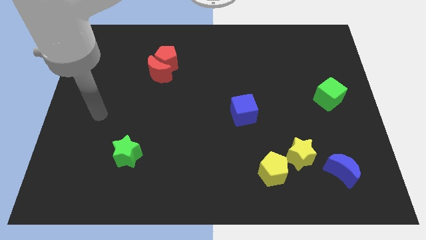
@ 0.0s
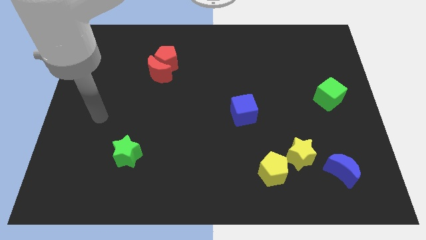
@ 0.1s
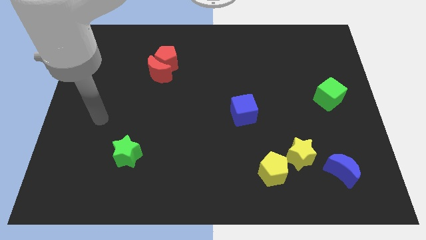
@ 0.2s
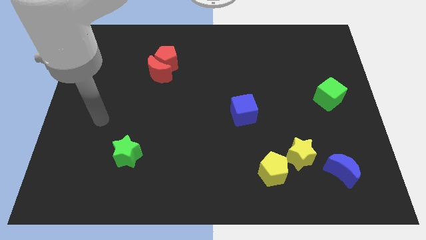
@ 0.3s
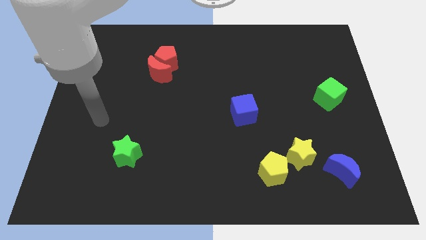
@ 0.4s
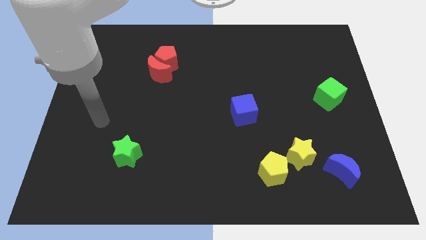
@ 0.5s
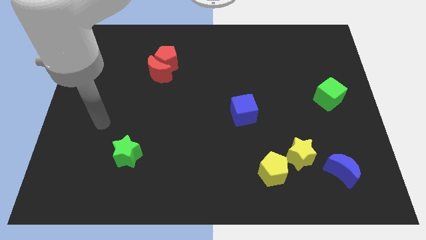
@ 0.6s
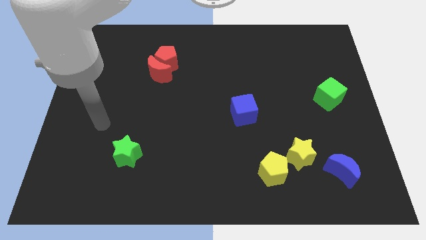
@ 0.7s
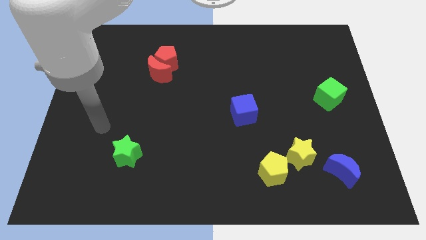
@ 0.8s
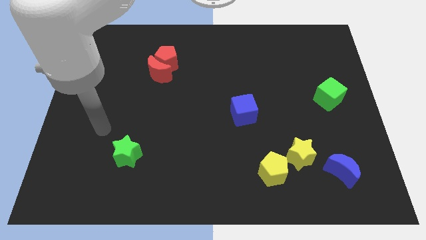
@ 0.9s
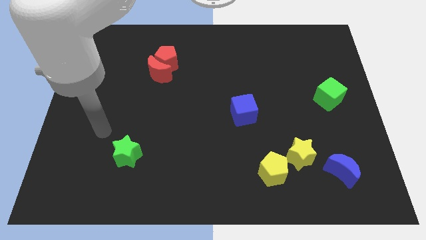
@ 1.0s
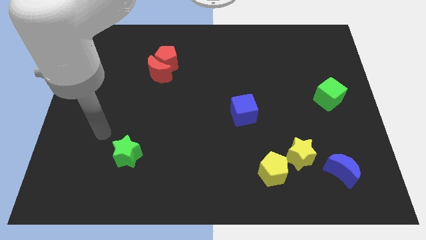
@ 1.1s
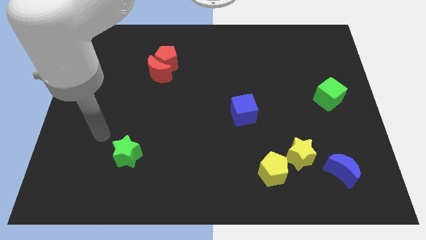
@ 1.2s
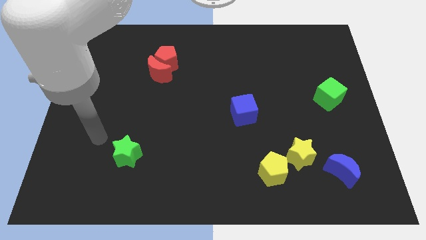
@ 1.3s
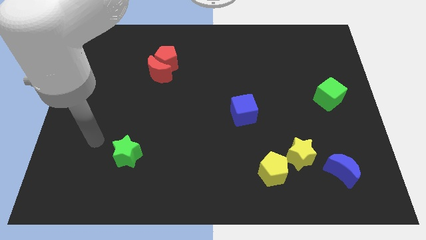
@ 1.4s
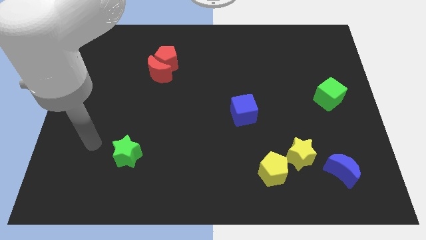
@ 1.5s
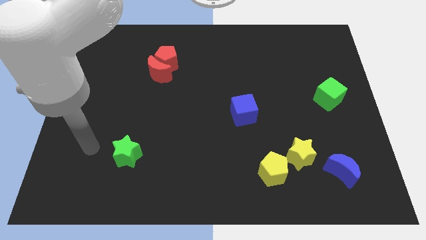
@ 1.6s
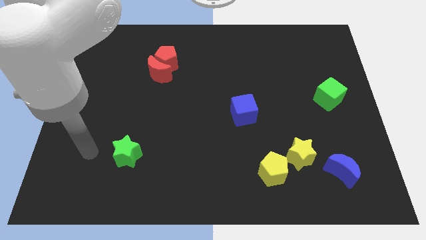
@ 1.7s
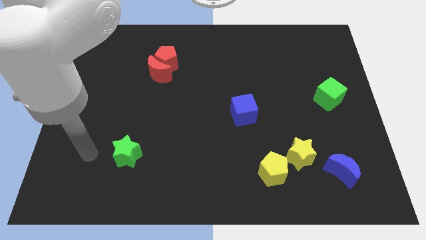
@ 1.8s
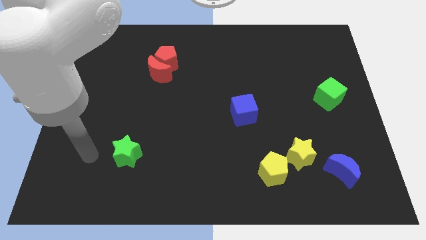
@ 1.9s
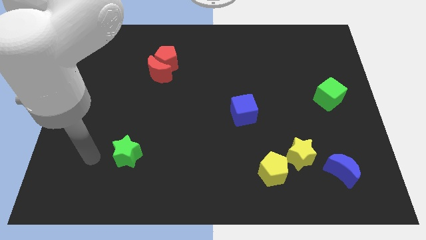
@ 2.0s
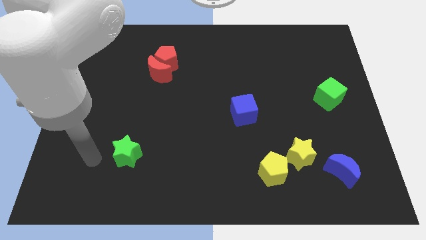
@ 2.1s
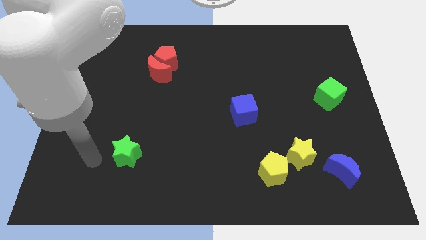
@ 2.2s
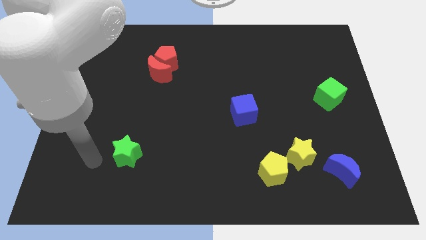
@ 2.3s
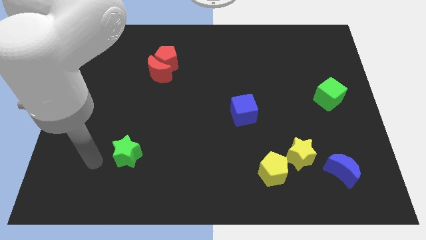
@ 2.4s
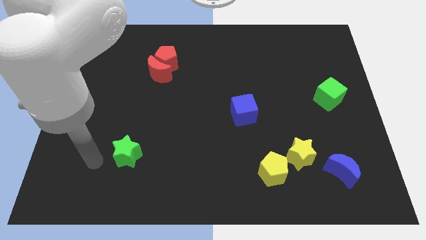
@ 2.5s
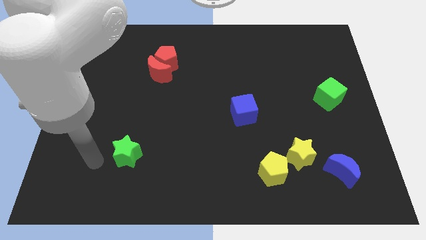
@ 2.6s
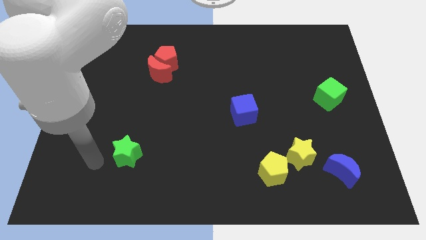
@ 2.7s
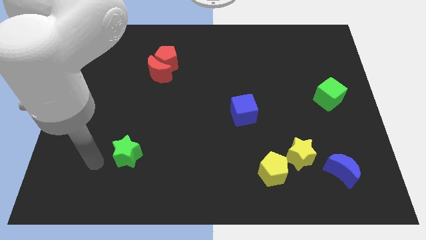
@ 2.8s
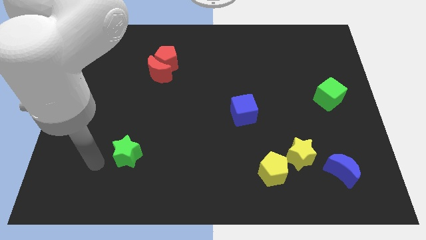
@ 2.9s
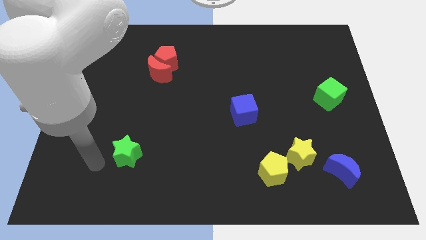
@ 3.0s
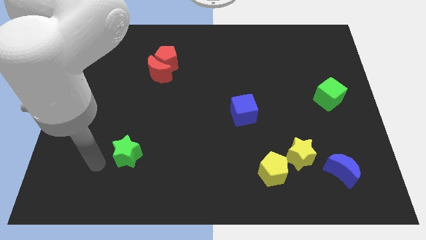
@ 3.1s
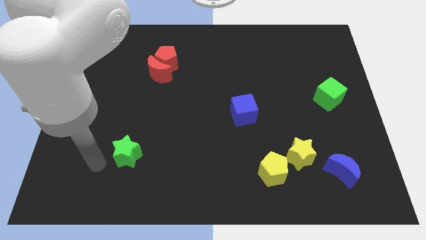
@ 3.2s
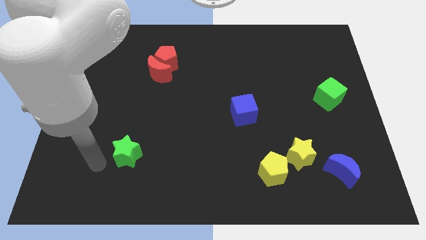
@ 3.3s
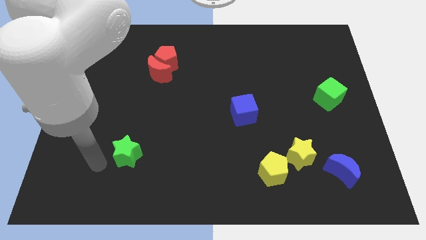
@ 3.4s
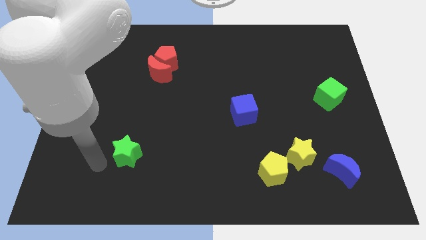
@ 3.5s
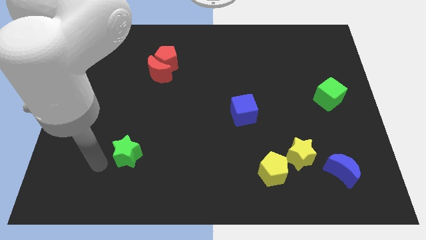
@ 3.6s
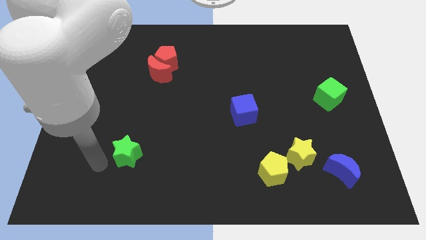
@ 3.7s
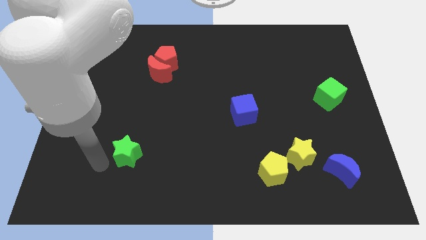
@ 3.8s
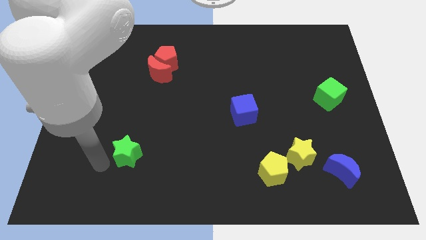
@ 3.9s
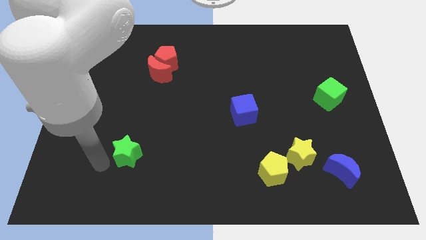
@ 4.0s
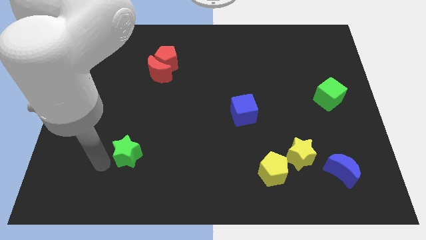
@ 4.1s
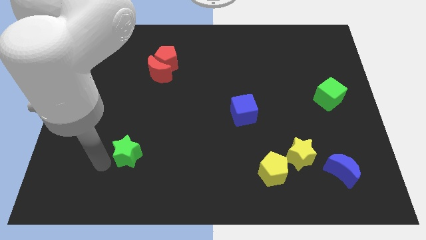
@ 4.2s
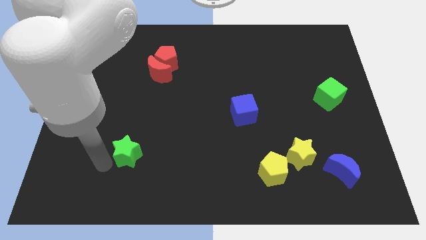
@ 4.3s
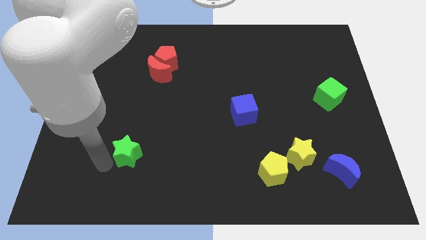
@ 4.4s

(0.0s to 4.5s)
move your hand close to green star

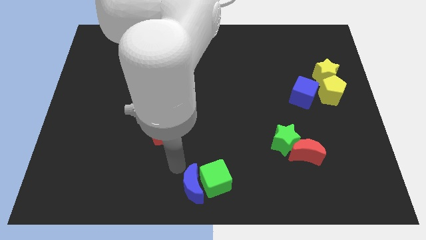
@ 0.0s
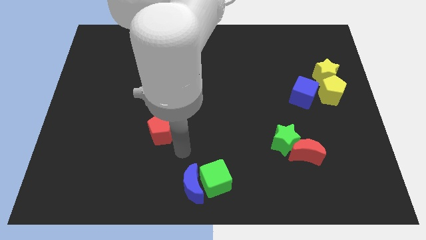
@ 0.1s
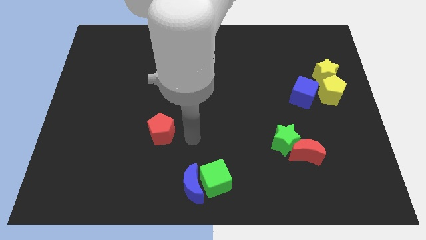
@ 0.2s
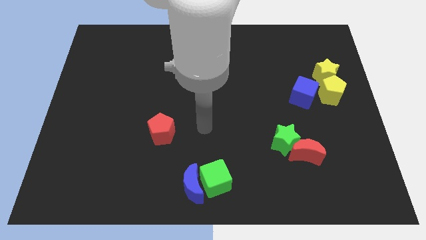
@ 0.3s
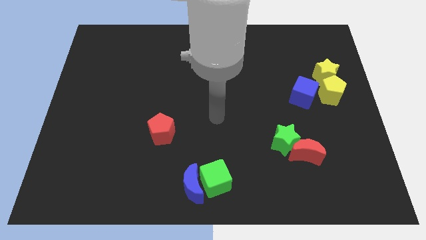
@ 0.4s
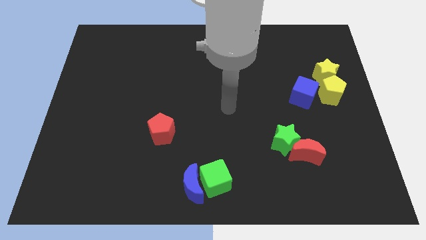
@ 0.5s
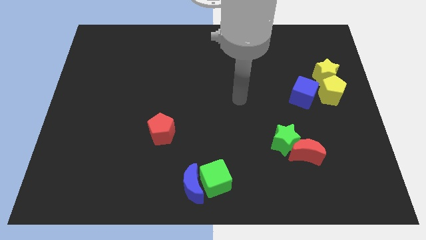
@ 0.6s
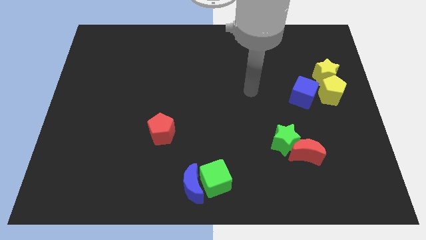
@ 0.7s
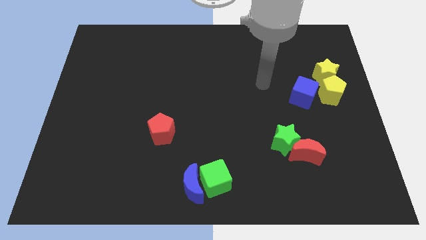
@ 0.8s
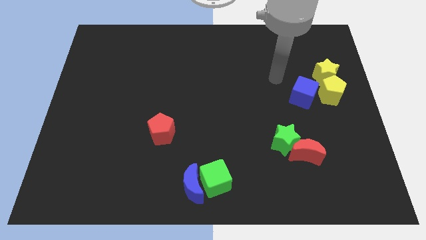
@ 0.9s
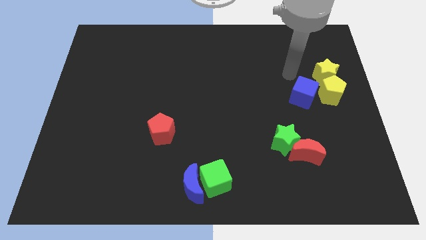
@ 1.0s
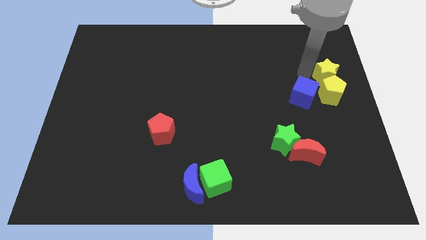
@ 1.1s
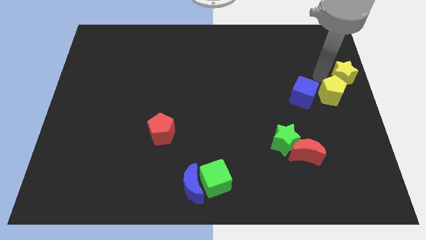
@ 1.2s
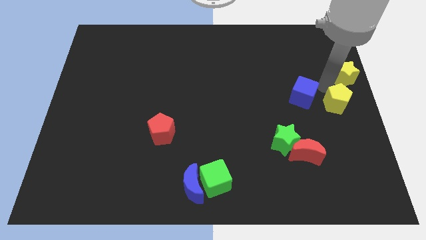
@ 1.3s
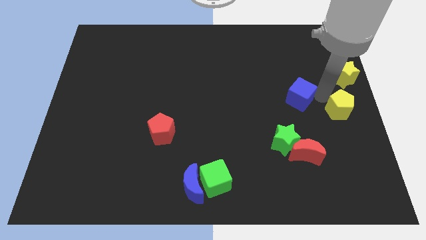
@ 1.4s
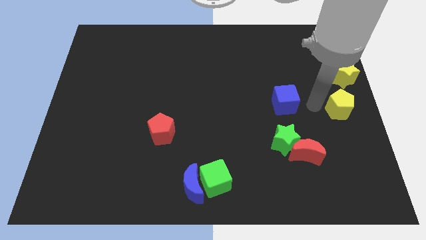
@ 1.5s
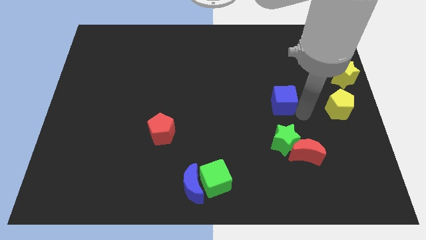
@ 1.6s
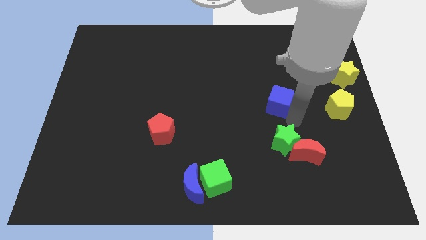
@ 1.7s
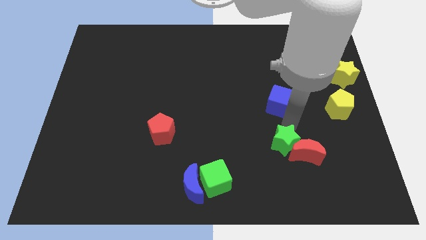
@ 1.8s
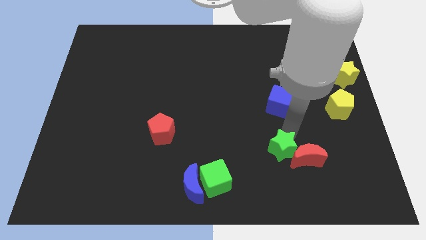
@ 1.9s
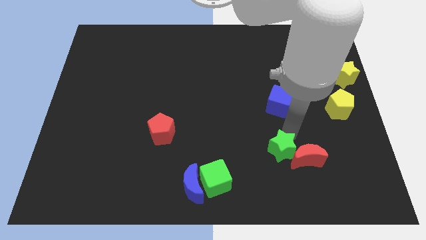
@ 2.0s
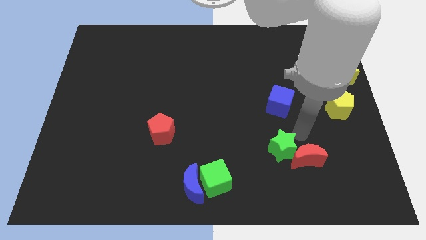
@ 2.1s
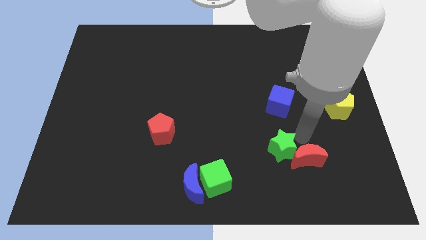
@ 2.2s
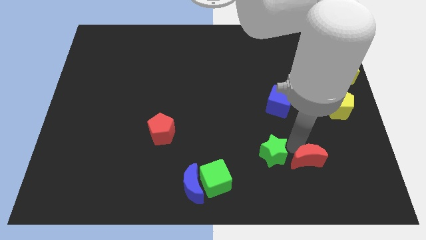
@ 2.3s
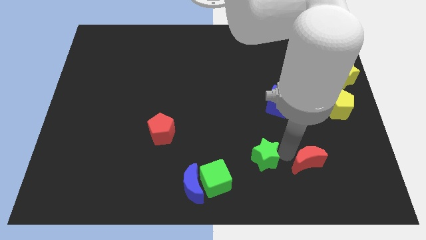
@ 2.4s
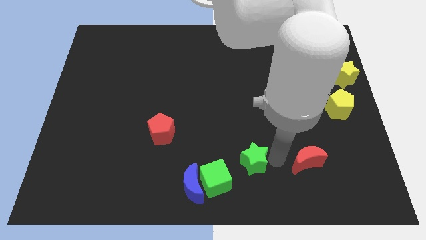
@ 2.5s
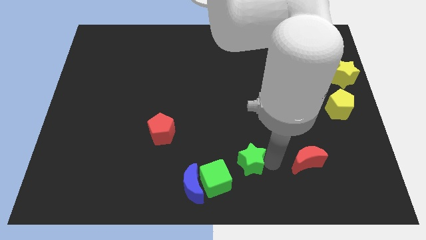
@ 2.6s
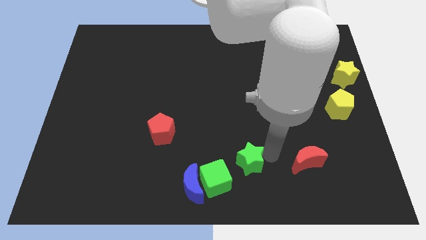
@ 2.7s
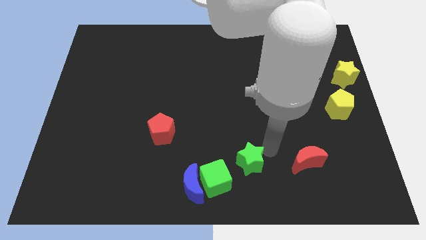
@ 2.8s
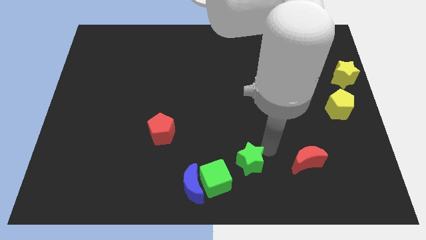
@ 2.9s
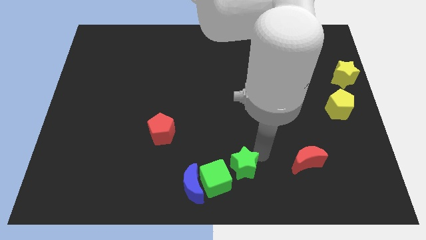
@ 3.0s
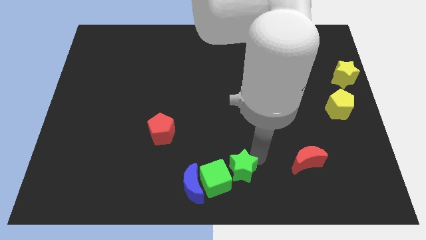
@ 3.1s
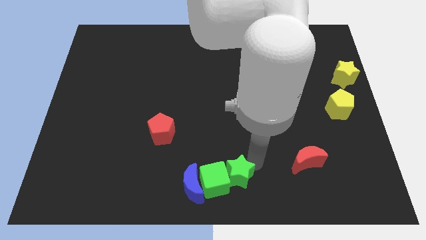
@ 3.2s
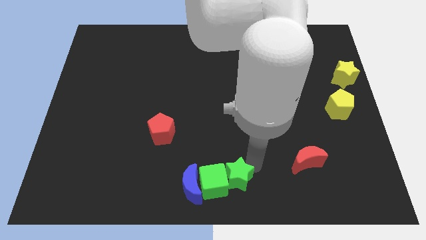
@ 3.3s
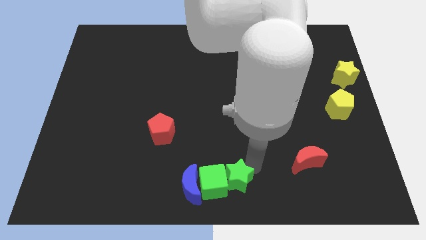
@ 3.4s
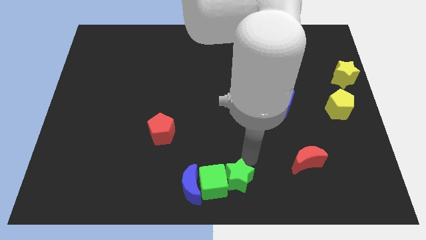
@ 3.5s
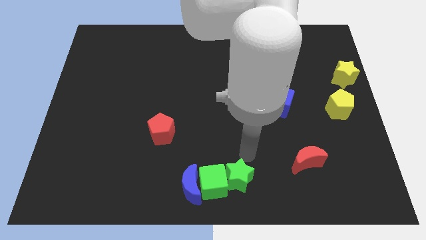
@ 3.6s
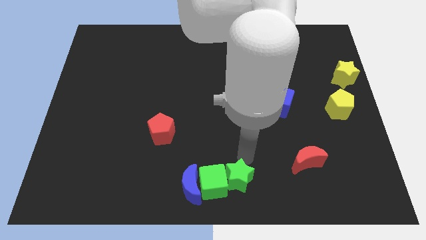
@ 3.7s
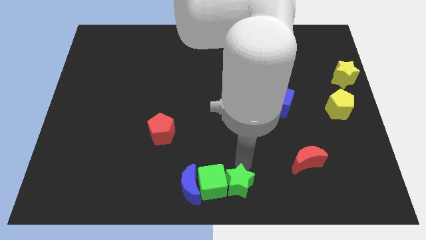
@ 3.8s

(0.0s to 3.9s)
move the green star to the right side of the green cube

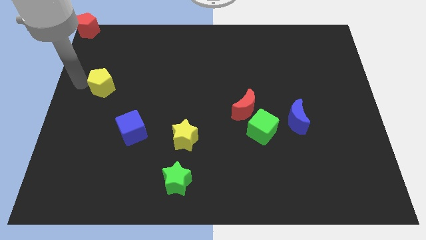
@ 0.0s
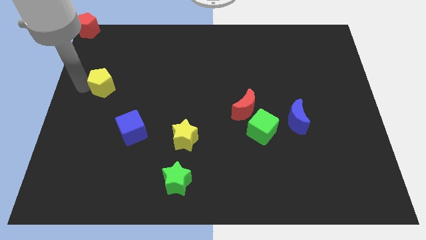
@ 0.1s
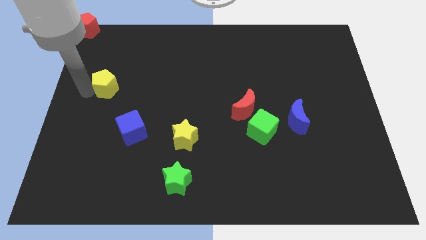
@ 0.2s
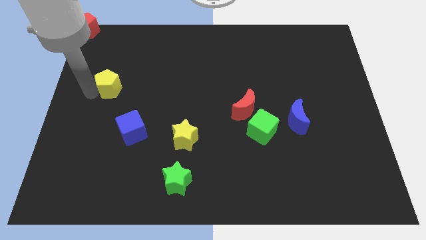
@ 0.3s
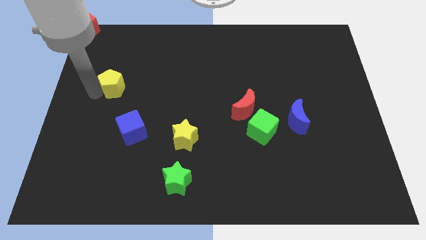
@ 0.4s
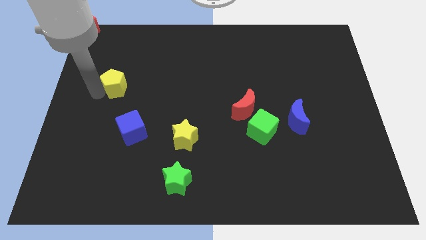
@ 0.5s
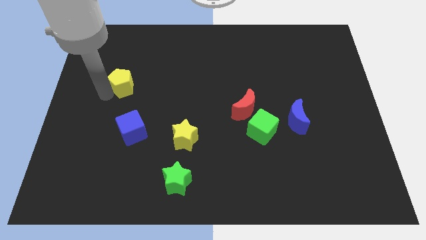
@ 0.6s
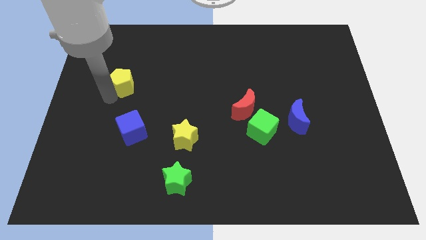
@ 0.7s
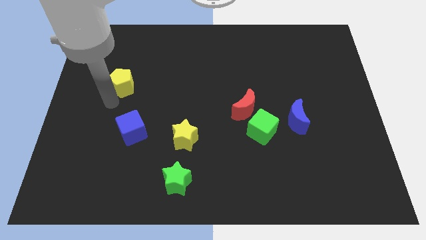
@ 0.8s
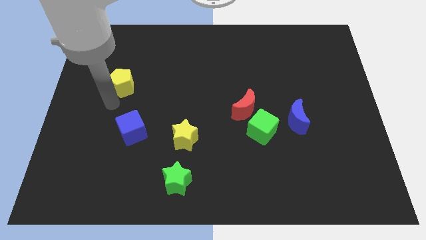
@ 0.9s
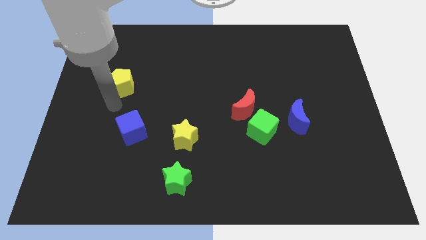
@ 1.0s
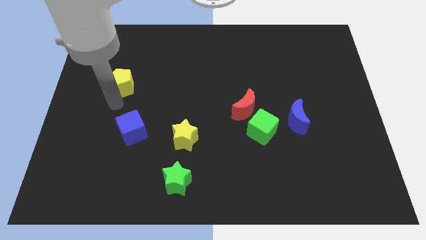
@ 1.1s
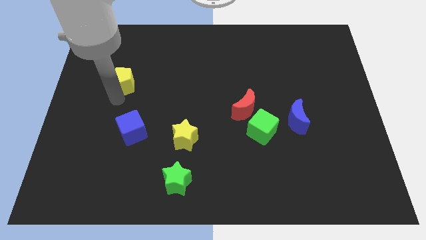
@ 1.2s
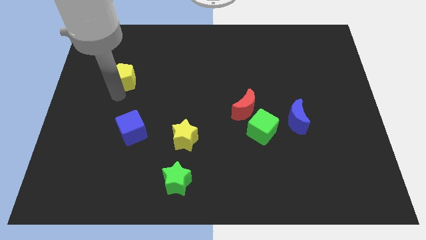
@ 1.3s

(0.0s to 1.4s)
slightly move the yellow pentagon towards the right
